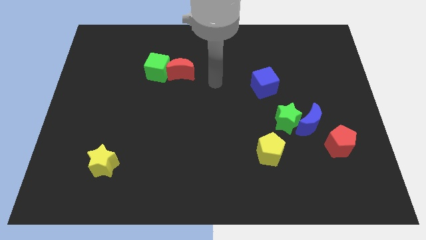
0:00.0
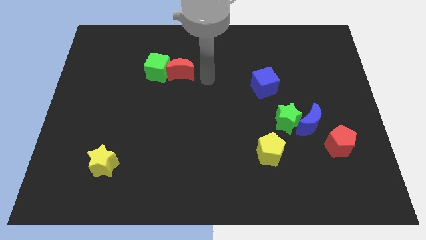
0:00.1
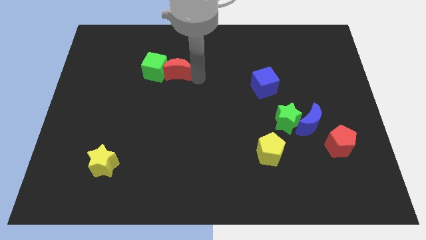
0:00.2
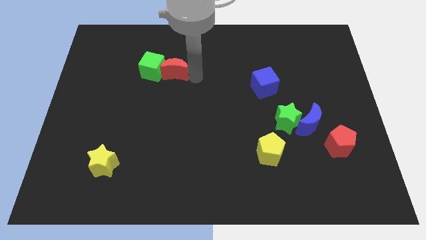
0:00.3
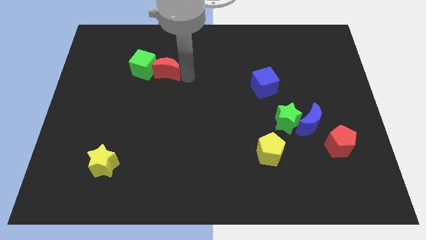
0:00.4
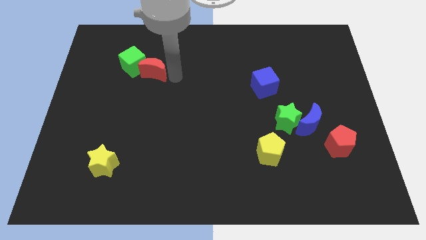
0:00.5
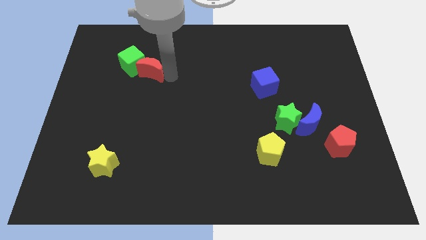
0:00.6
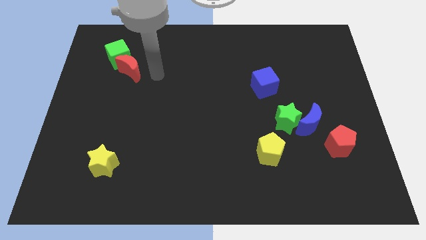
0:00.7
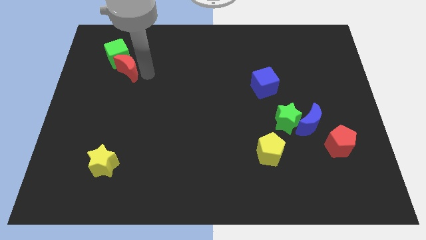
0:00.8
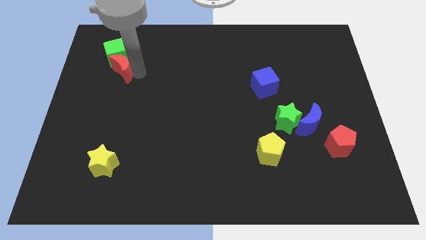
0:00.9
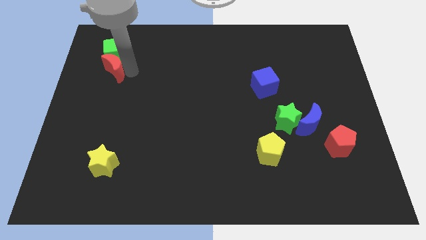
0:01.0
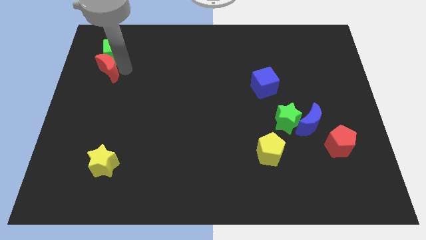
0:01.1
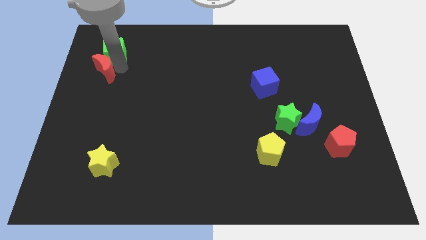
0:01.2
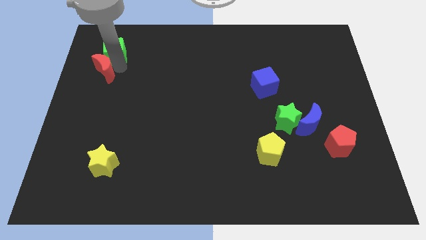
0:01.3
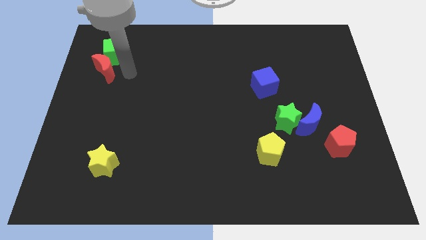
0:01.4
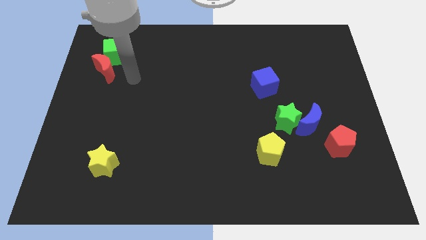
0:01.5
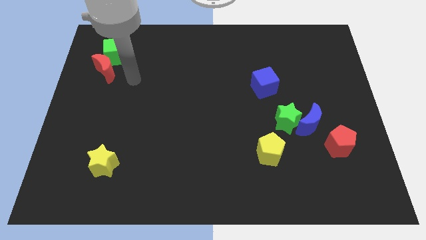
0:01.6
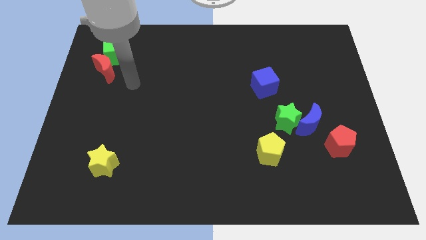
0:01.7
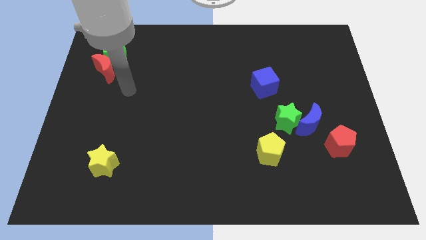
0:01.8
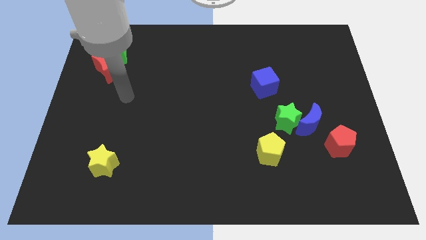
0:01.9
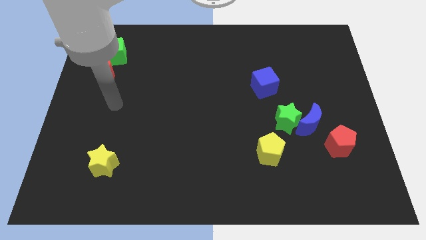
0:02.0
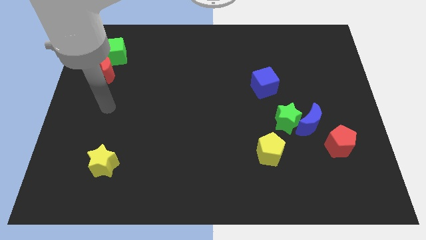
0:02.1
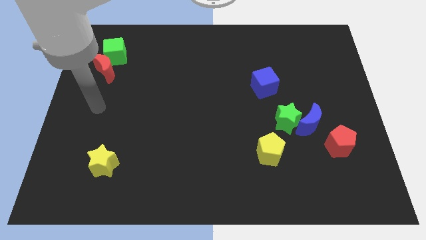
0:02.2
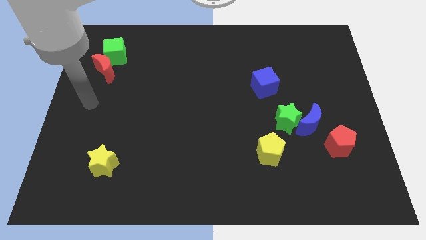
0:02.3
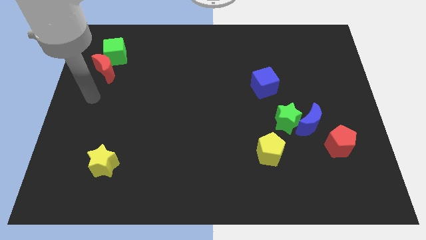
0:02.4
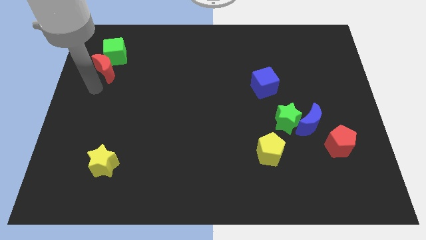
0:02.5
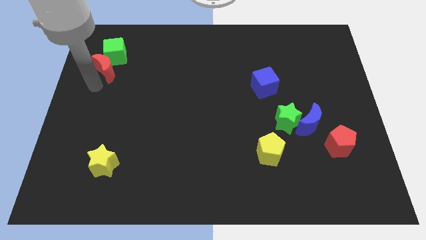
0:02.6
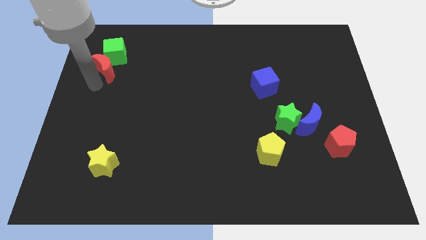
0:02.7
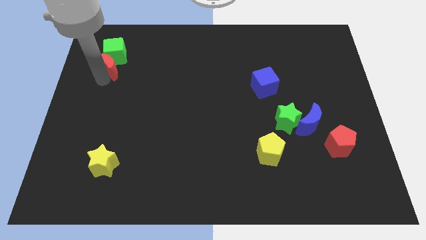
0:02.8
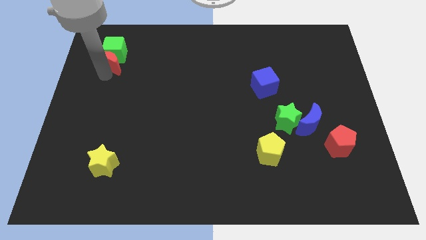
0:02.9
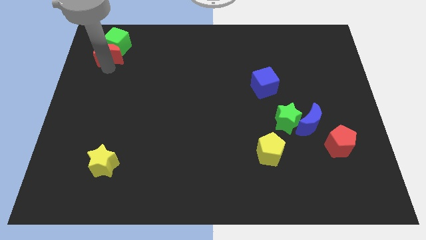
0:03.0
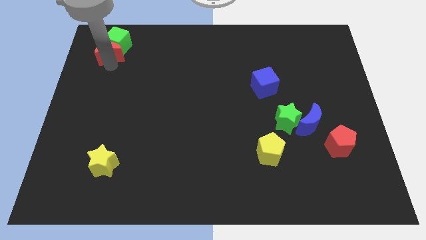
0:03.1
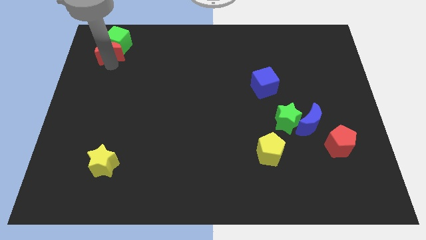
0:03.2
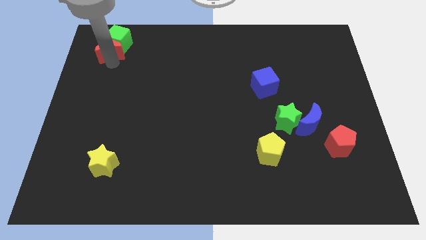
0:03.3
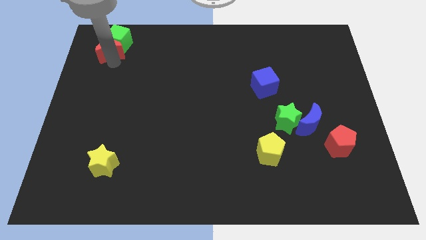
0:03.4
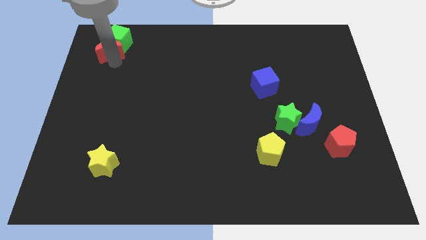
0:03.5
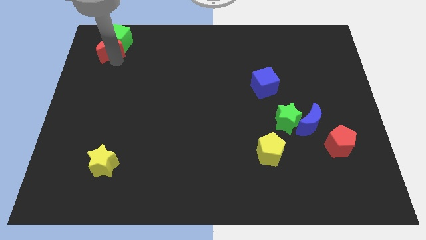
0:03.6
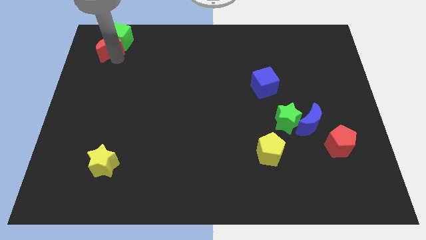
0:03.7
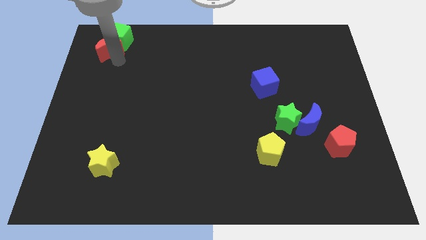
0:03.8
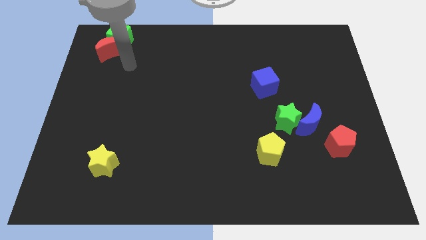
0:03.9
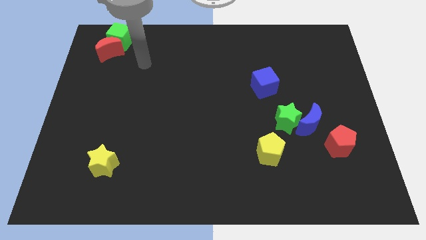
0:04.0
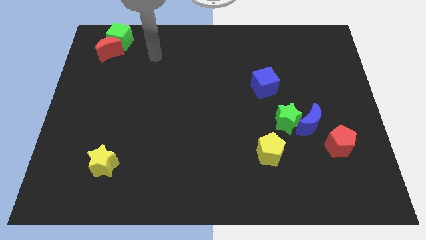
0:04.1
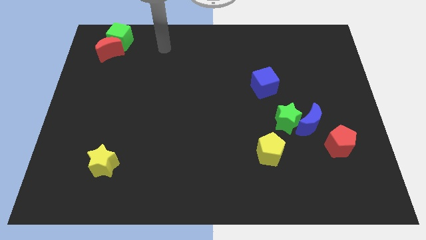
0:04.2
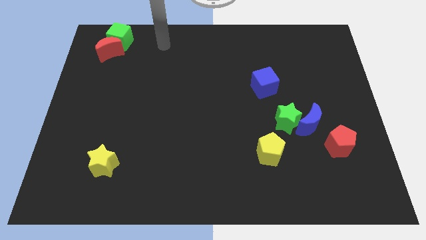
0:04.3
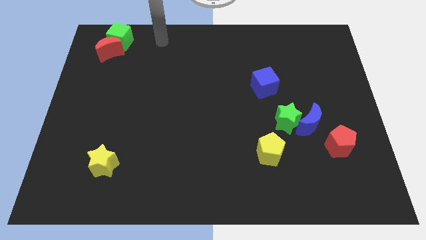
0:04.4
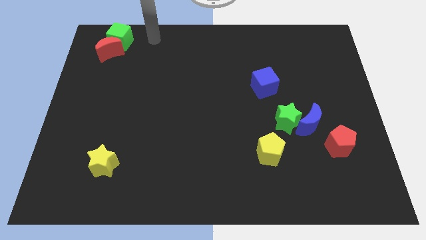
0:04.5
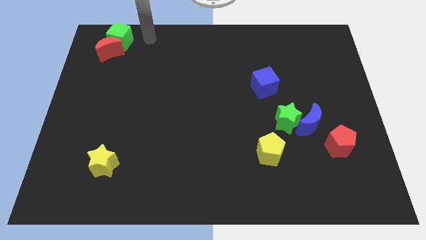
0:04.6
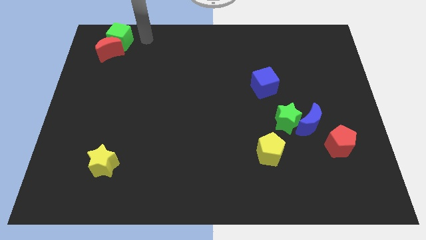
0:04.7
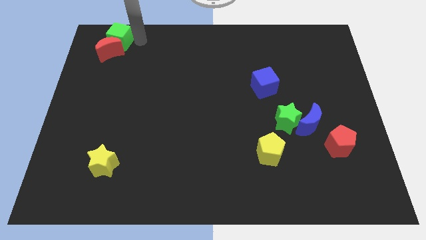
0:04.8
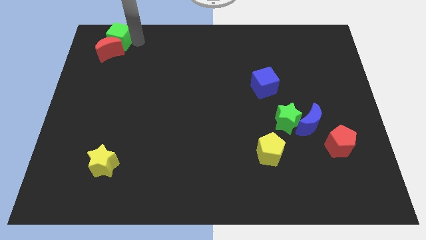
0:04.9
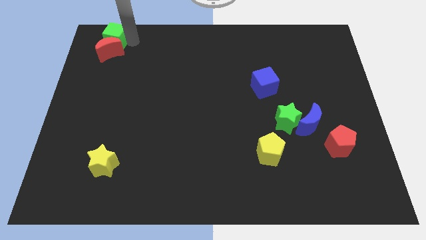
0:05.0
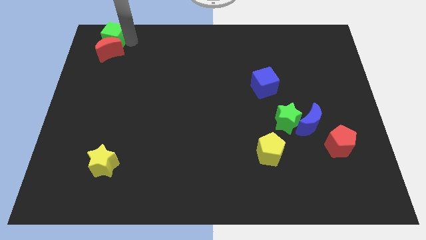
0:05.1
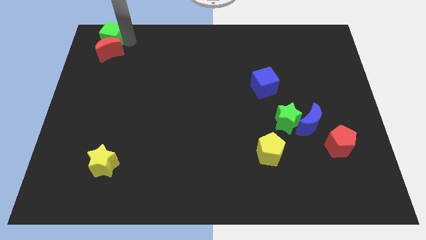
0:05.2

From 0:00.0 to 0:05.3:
push the green cube and the red crescent to the top left corner of the board

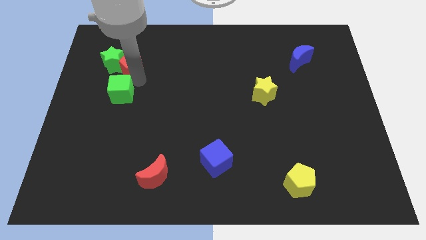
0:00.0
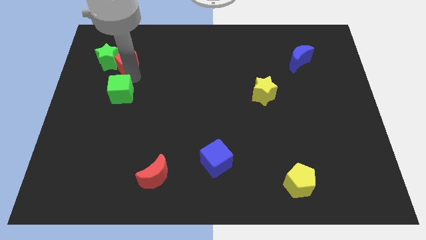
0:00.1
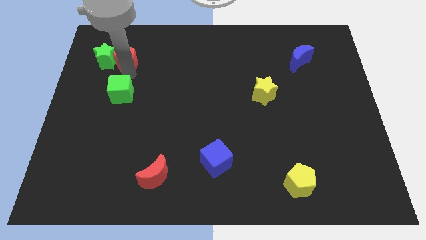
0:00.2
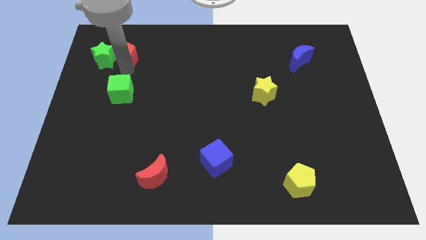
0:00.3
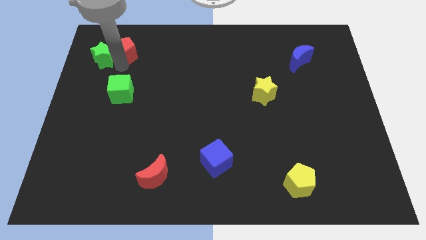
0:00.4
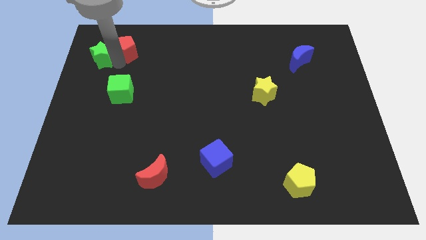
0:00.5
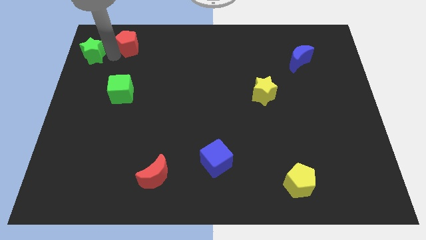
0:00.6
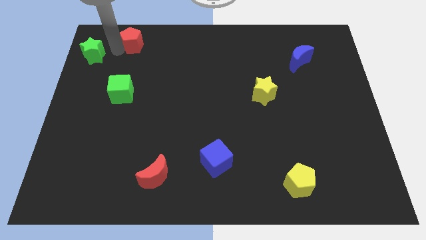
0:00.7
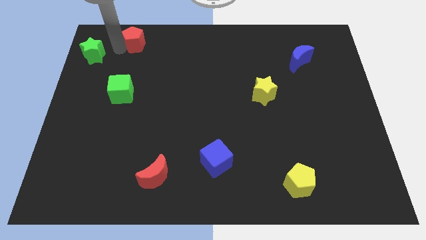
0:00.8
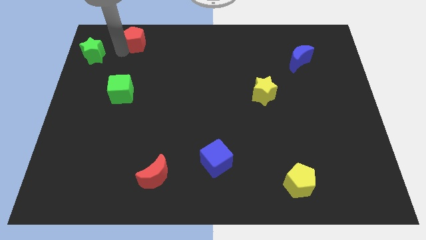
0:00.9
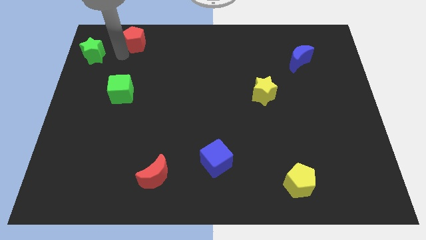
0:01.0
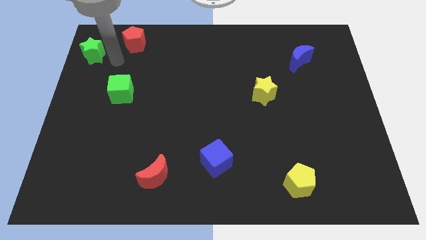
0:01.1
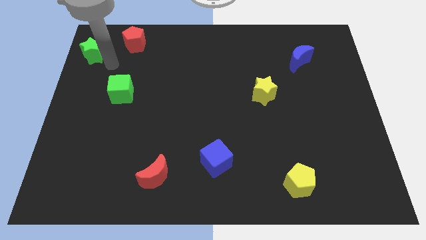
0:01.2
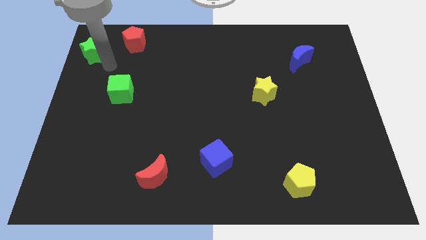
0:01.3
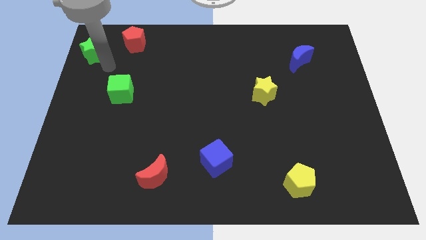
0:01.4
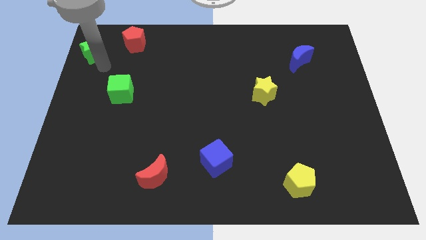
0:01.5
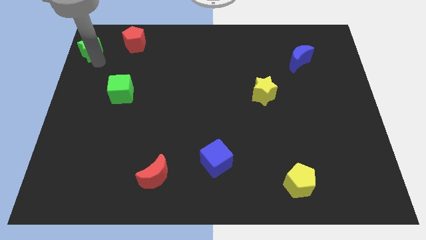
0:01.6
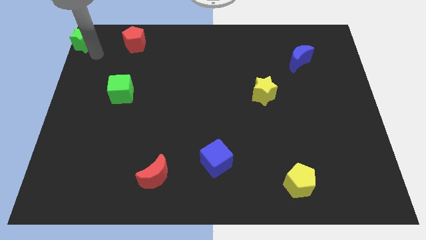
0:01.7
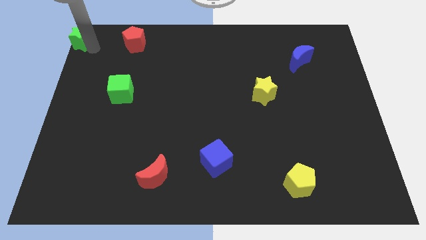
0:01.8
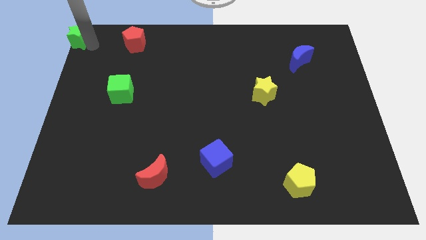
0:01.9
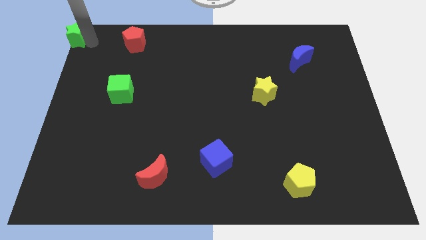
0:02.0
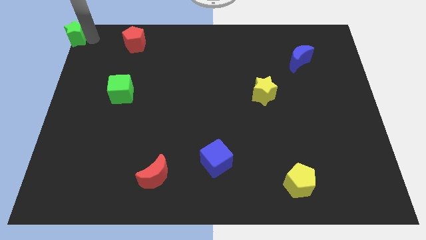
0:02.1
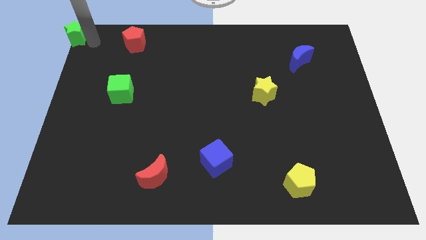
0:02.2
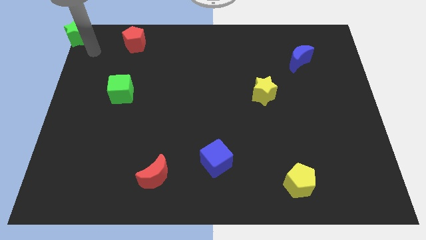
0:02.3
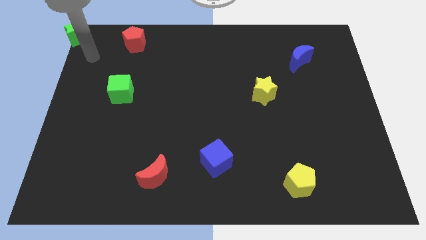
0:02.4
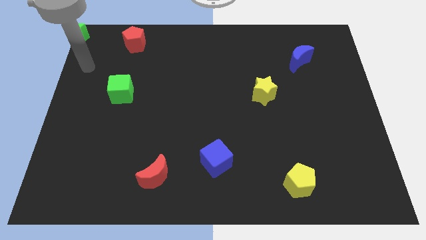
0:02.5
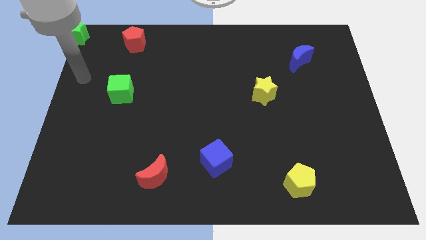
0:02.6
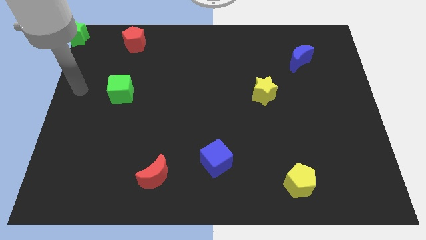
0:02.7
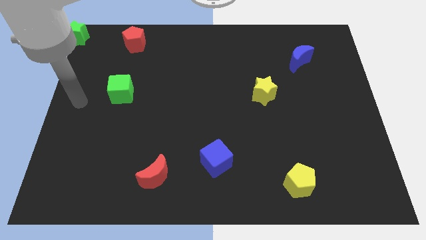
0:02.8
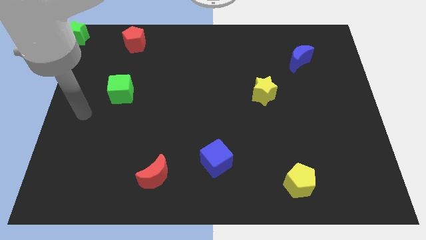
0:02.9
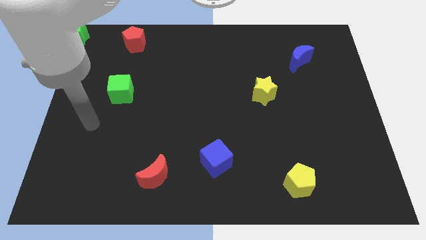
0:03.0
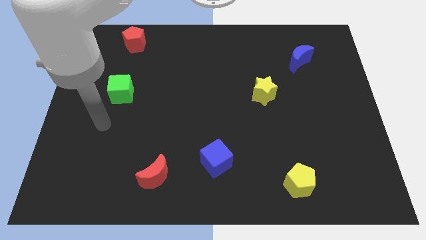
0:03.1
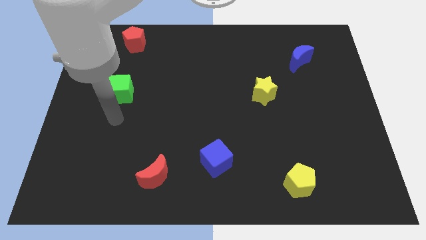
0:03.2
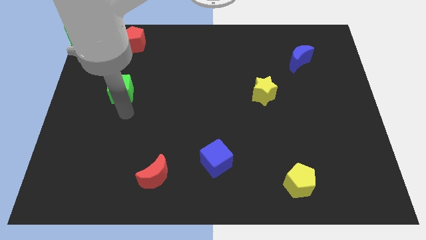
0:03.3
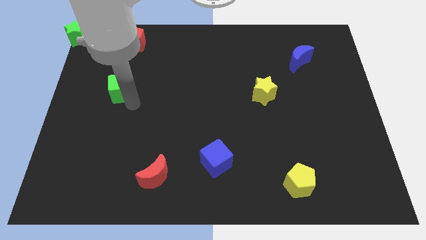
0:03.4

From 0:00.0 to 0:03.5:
separate the green star from the red pentagon
